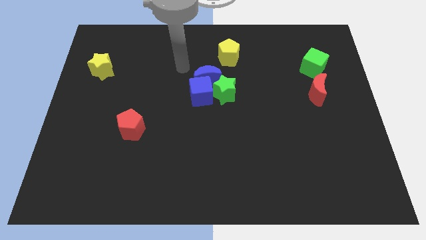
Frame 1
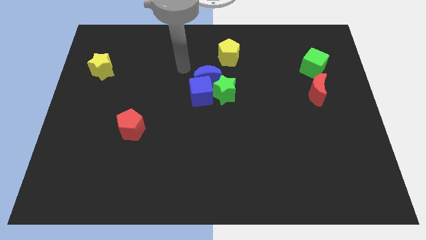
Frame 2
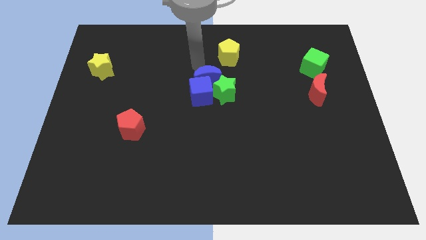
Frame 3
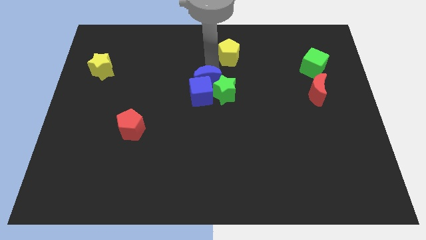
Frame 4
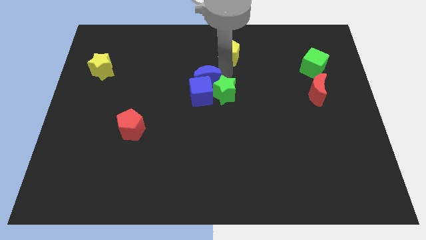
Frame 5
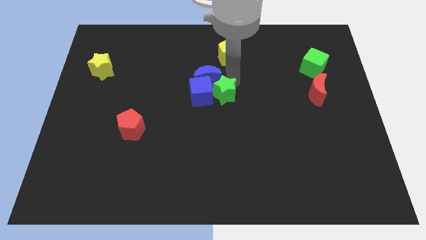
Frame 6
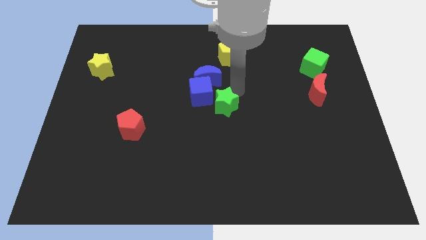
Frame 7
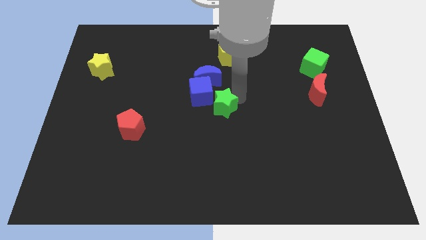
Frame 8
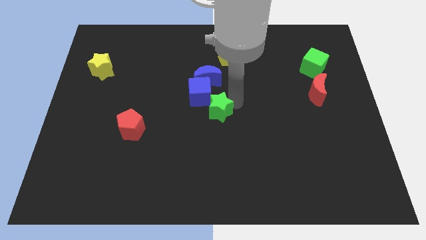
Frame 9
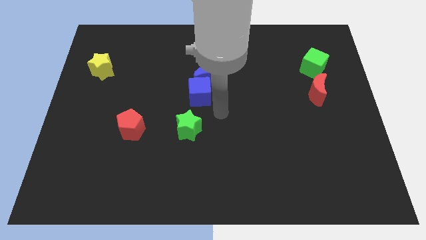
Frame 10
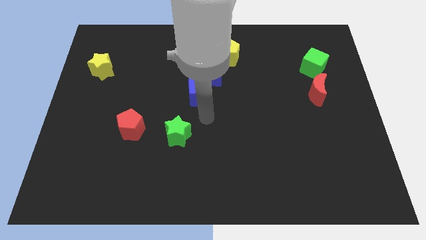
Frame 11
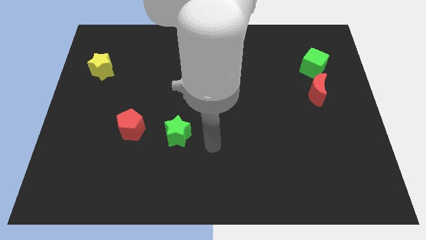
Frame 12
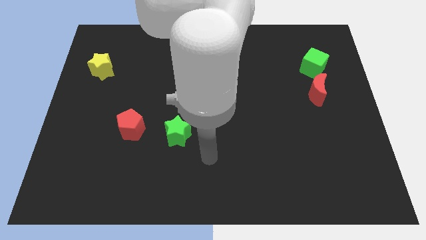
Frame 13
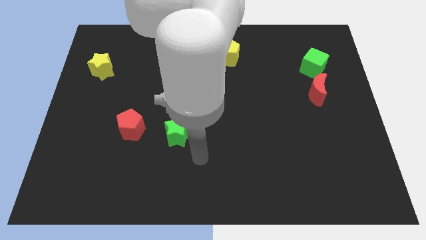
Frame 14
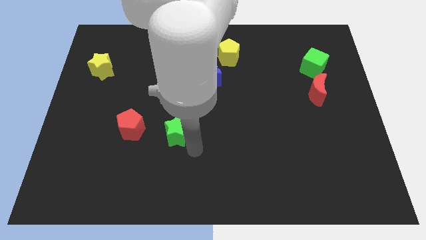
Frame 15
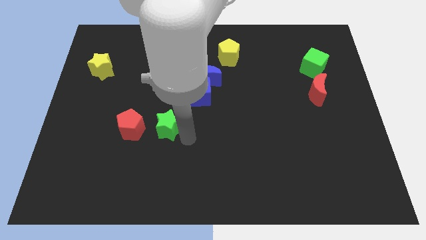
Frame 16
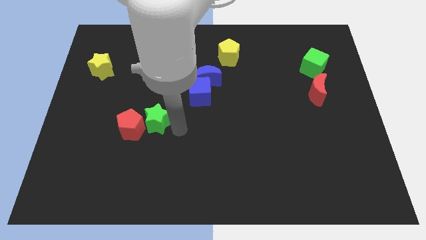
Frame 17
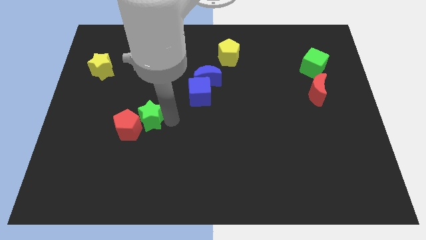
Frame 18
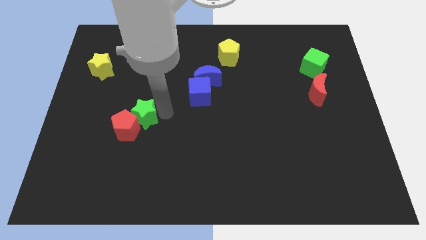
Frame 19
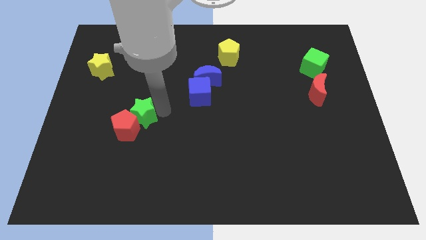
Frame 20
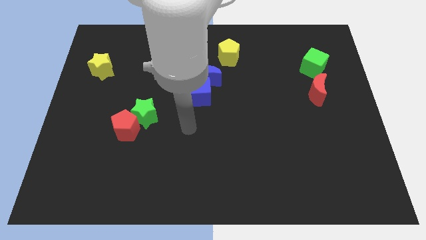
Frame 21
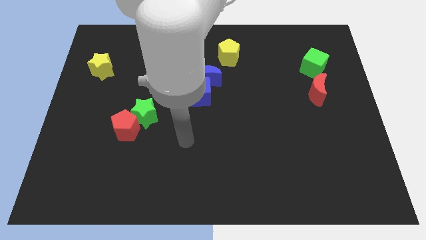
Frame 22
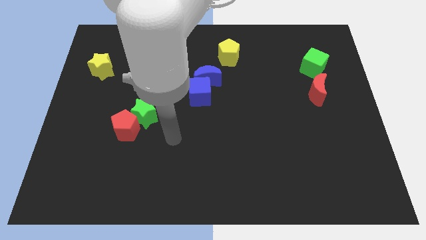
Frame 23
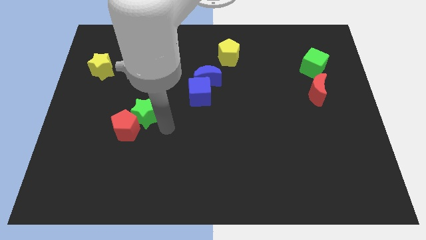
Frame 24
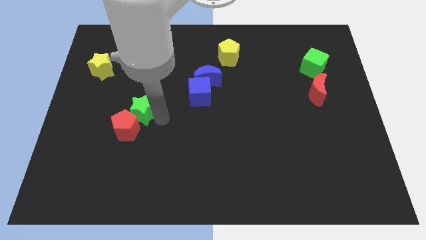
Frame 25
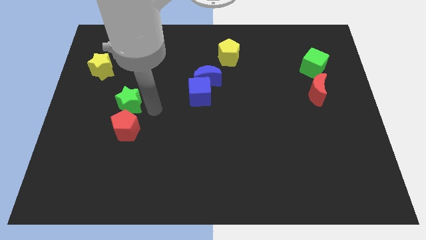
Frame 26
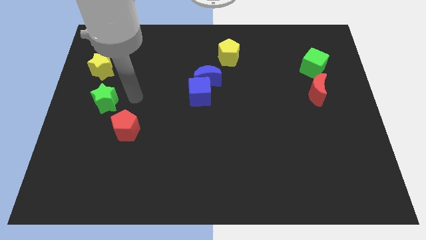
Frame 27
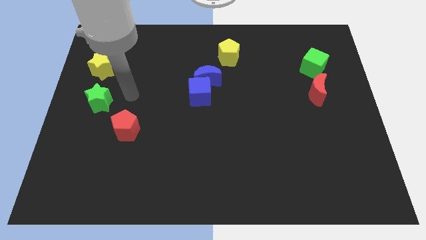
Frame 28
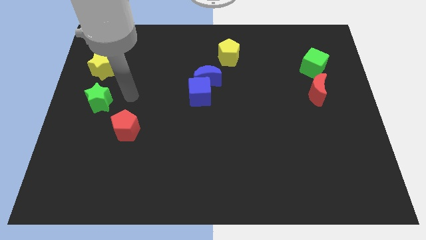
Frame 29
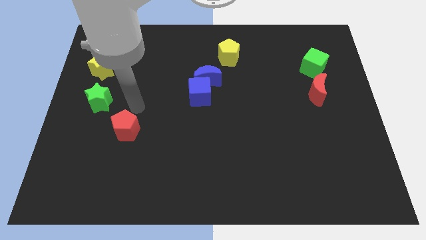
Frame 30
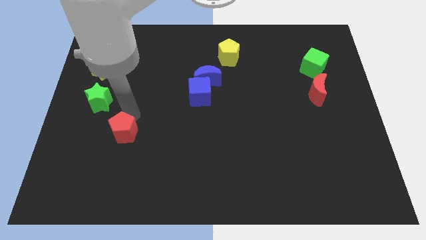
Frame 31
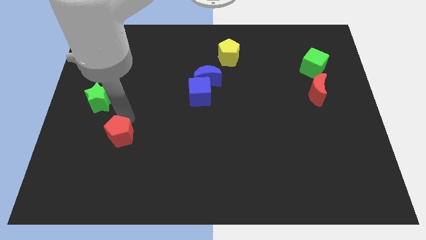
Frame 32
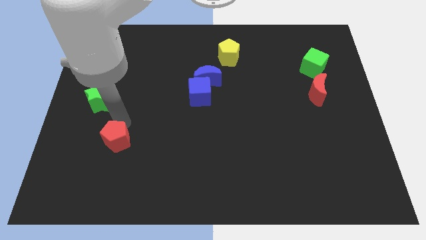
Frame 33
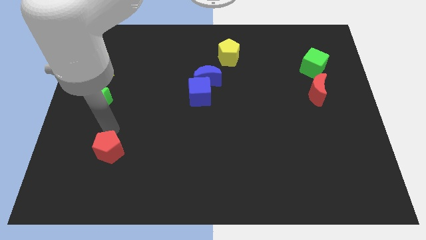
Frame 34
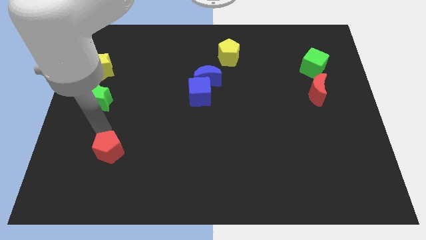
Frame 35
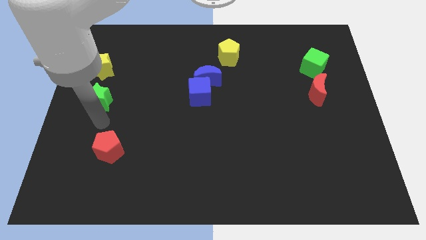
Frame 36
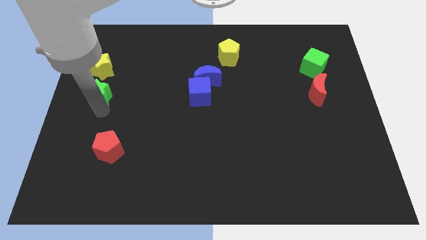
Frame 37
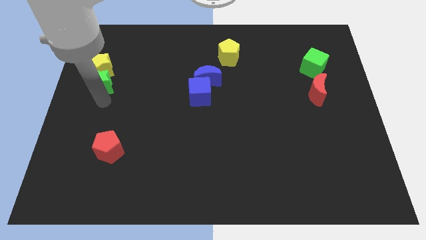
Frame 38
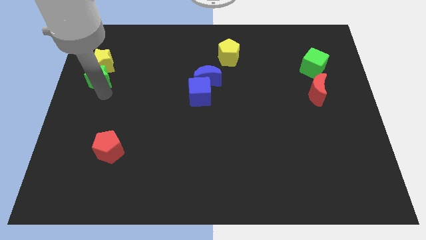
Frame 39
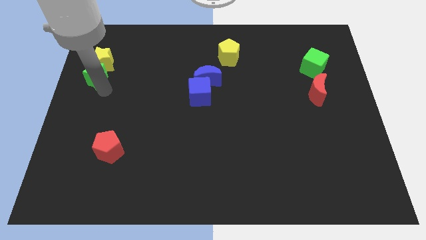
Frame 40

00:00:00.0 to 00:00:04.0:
put the green star next to the yellow star

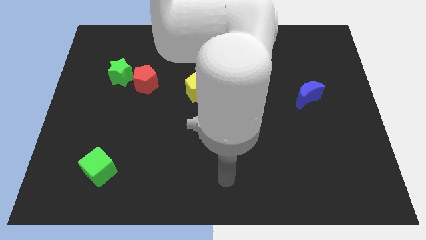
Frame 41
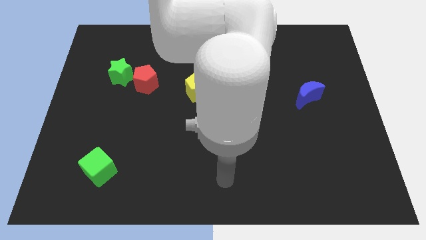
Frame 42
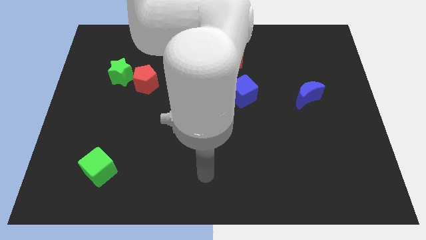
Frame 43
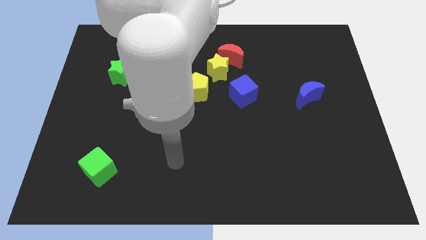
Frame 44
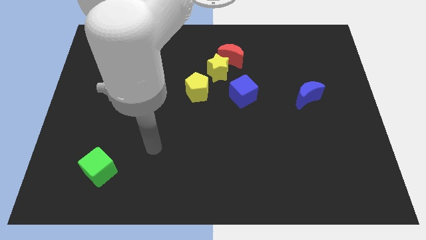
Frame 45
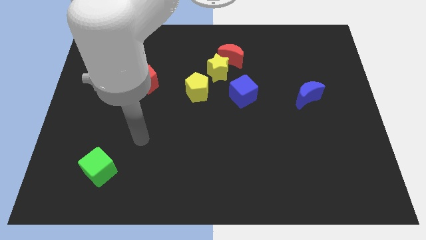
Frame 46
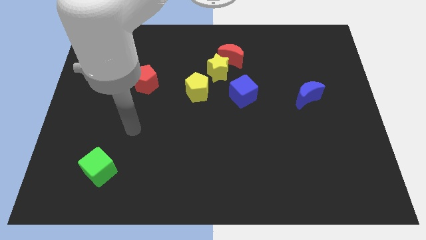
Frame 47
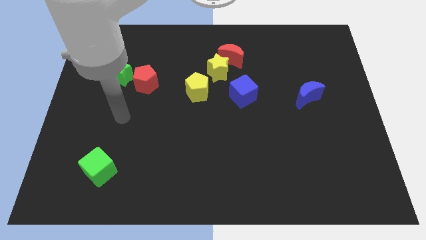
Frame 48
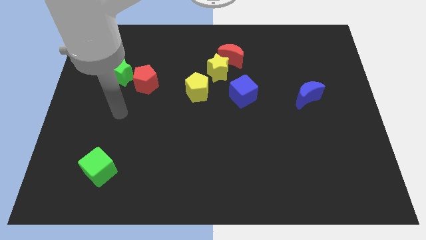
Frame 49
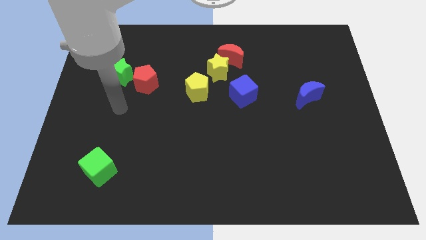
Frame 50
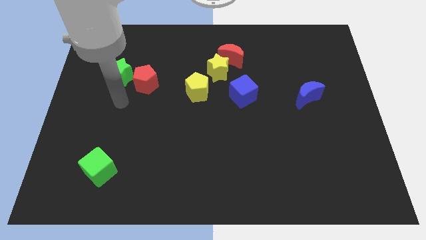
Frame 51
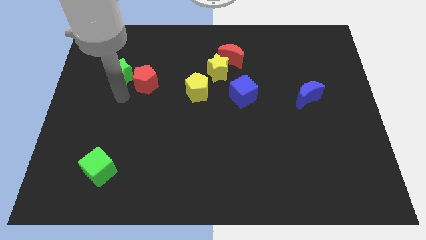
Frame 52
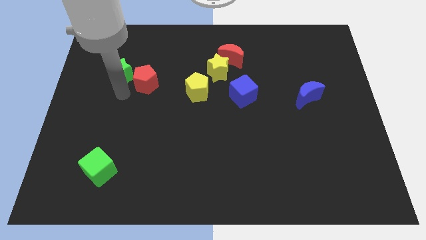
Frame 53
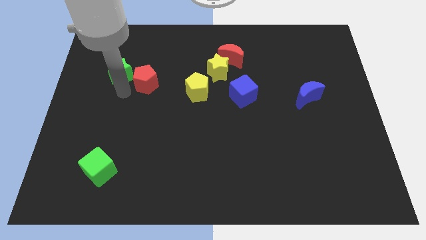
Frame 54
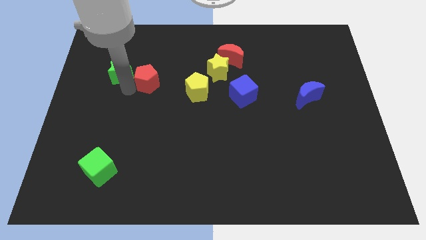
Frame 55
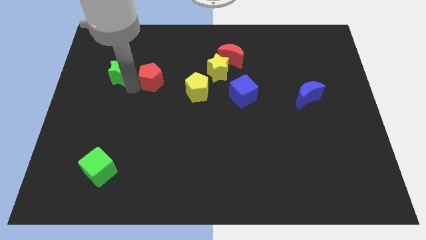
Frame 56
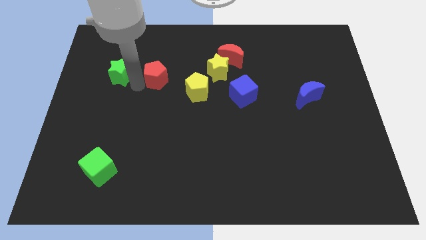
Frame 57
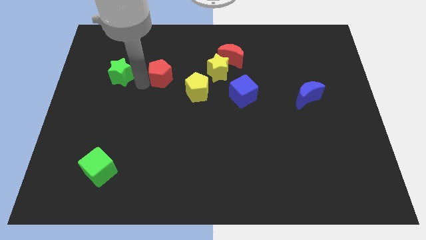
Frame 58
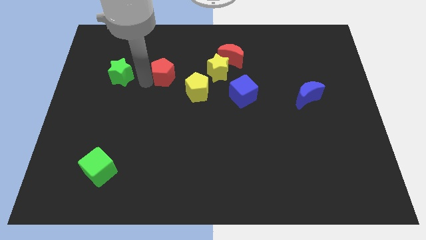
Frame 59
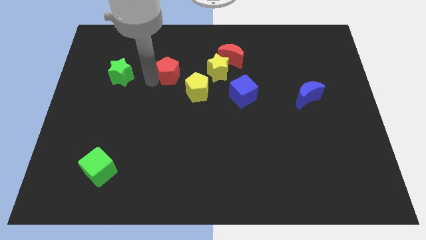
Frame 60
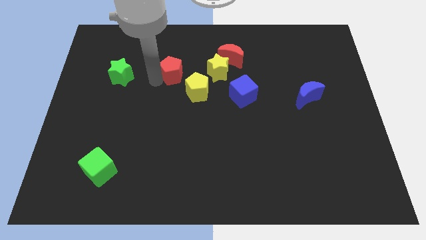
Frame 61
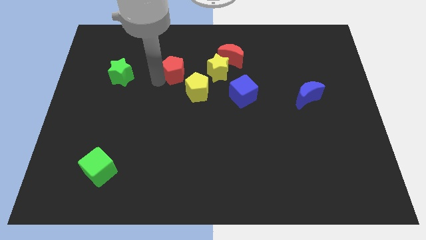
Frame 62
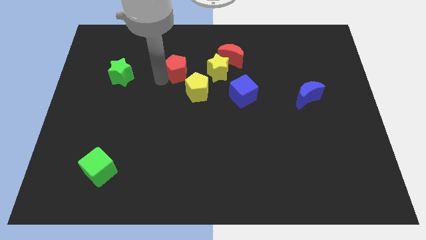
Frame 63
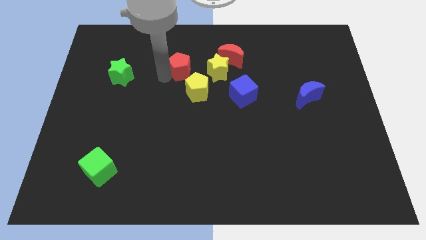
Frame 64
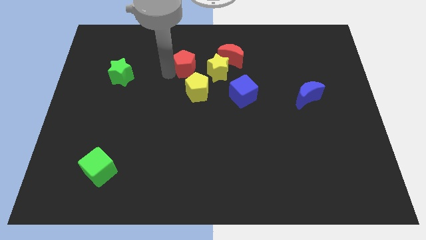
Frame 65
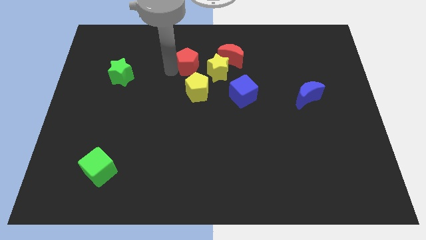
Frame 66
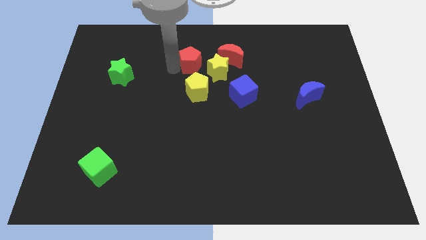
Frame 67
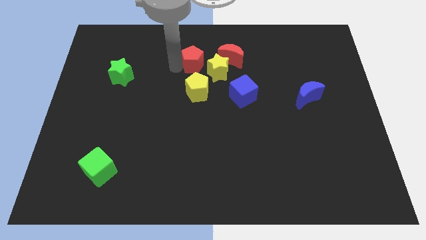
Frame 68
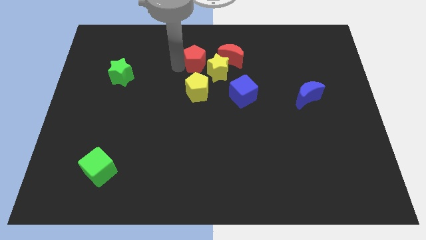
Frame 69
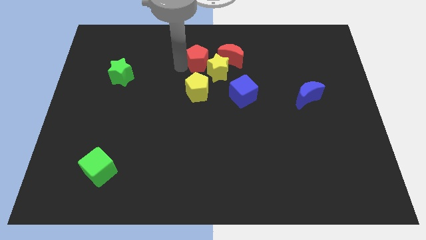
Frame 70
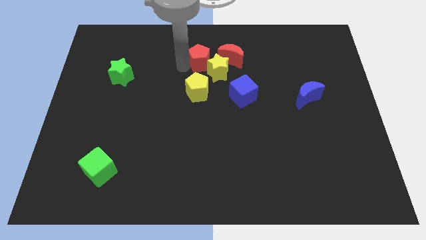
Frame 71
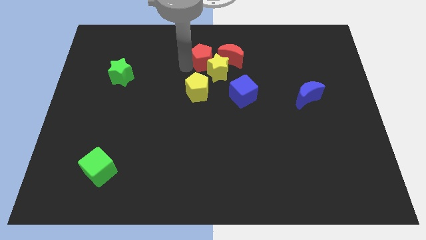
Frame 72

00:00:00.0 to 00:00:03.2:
move the red pentagon towards the yellow star

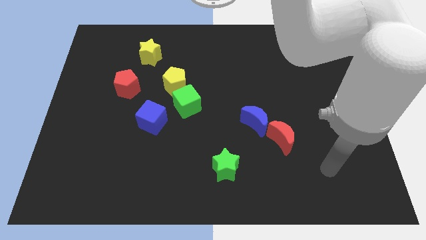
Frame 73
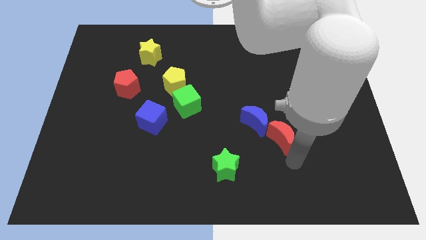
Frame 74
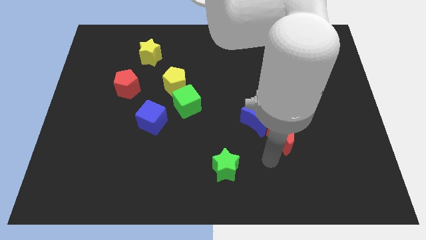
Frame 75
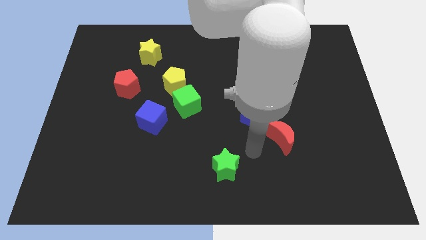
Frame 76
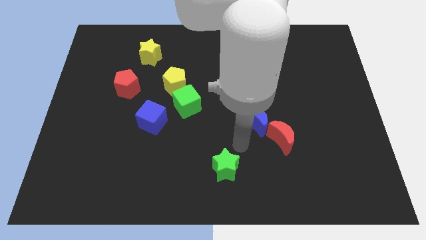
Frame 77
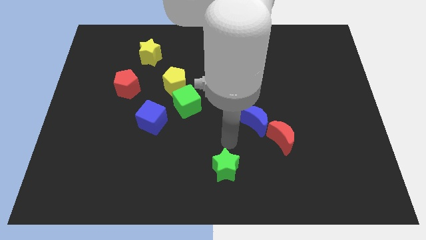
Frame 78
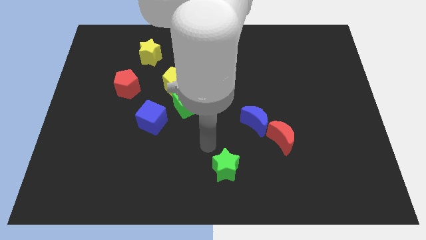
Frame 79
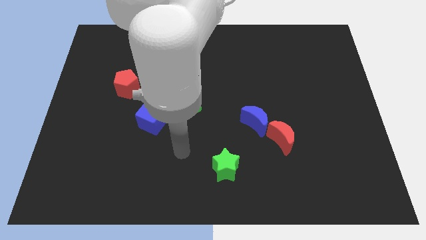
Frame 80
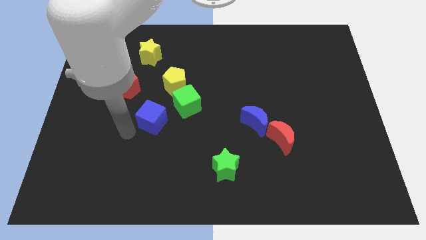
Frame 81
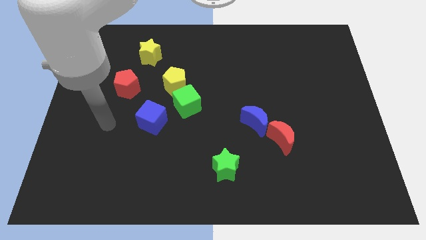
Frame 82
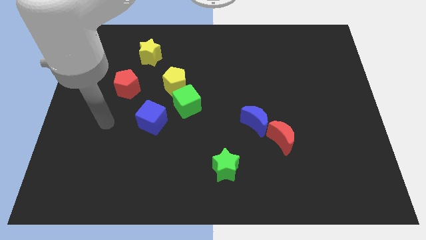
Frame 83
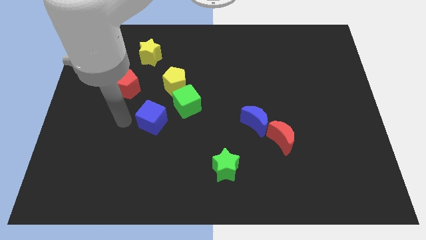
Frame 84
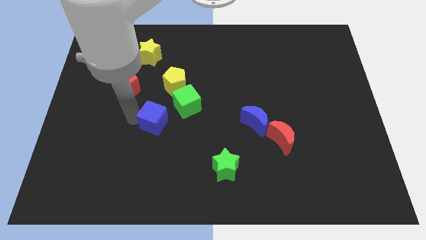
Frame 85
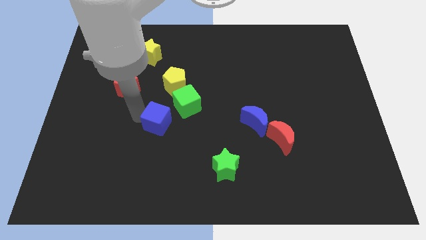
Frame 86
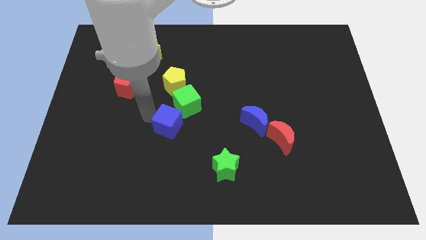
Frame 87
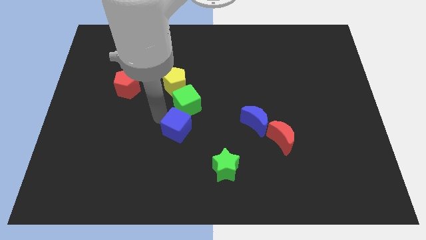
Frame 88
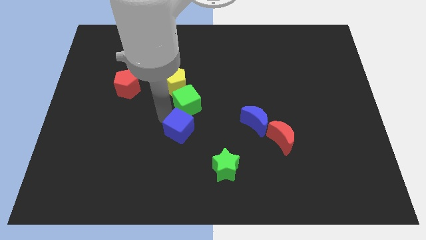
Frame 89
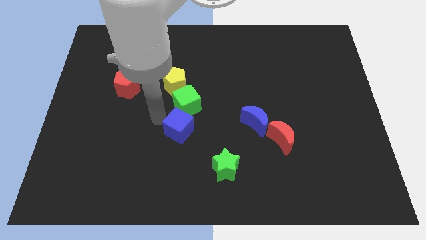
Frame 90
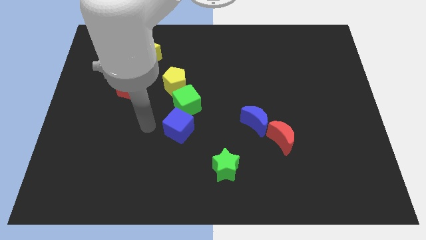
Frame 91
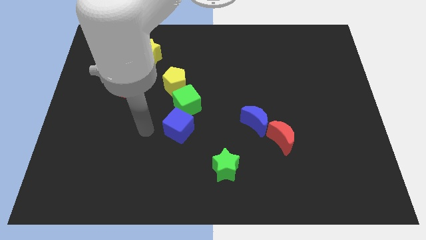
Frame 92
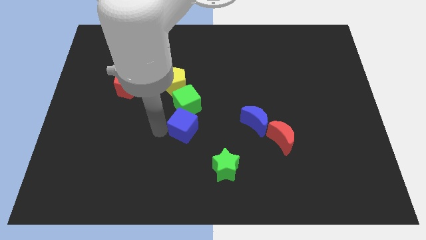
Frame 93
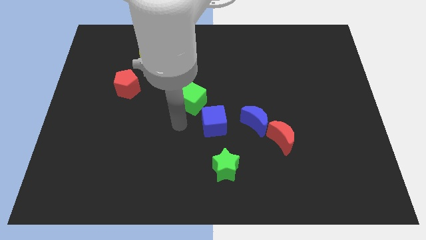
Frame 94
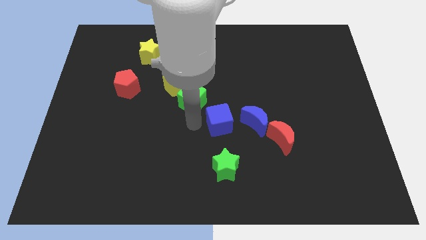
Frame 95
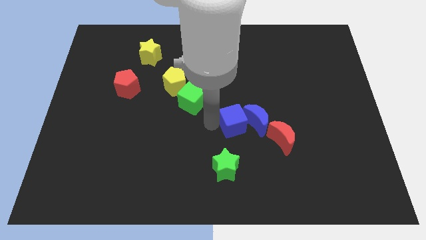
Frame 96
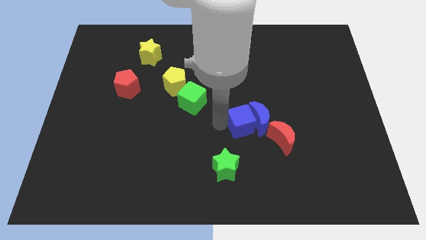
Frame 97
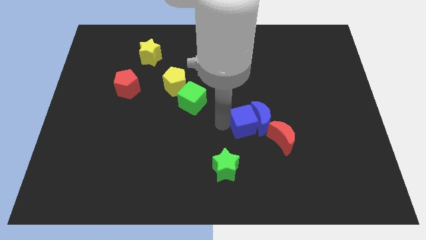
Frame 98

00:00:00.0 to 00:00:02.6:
slide the blue cube towards the blue moon
